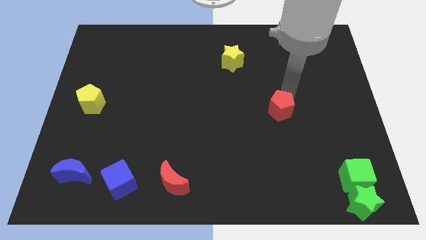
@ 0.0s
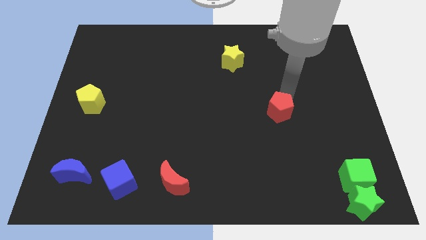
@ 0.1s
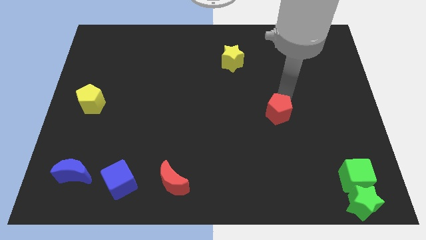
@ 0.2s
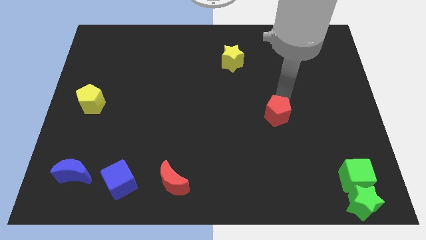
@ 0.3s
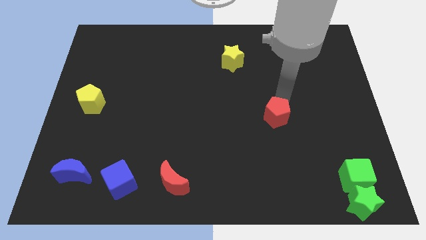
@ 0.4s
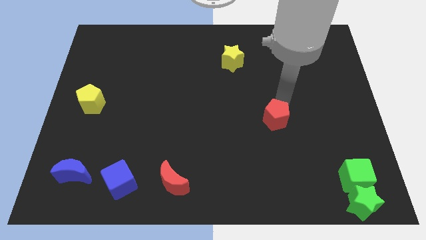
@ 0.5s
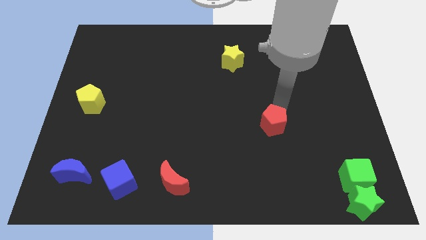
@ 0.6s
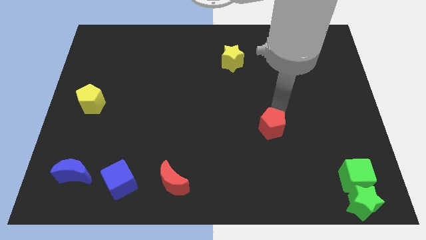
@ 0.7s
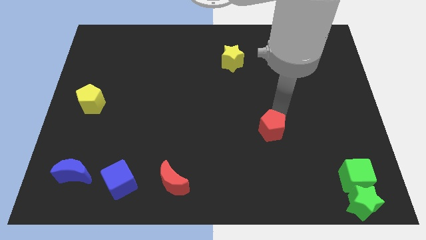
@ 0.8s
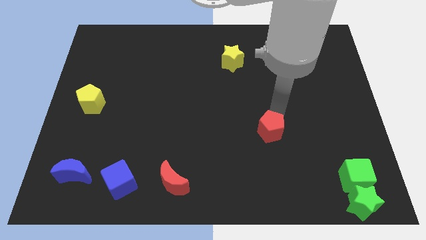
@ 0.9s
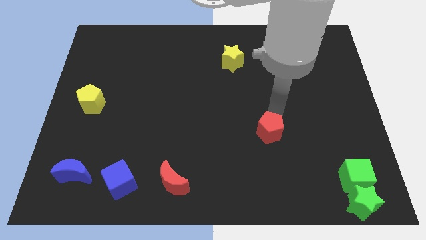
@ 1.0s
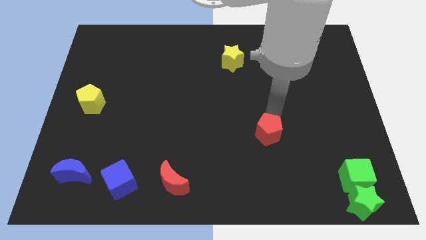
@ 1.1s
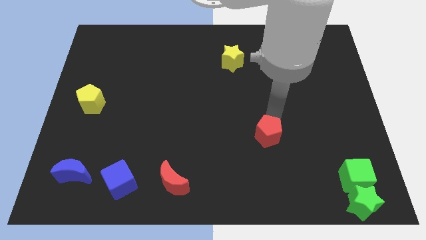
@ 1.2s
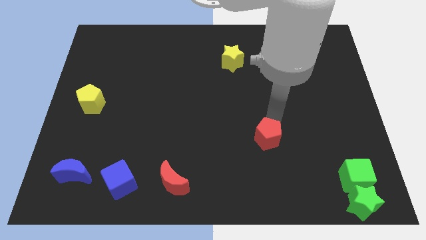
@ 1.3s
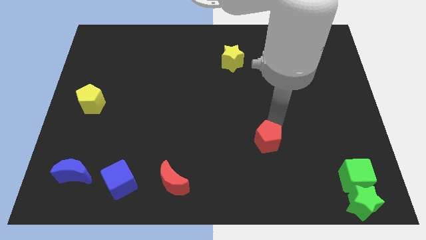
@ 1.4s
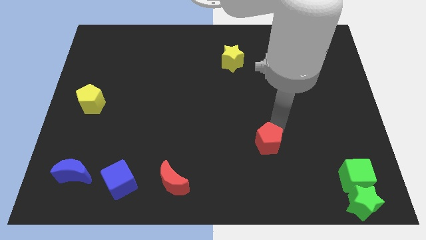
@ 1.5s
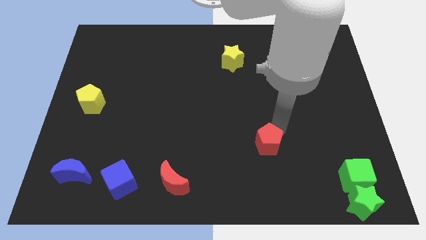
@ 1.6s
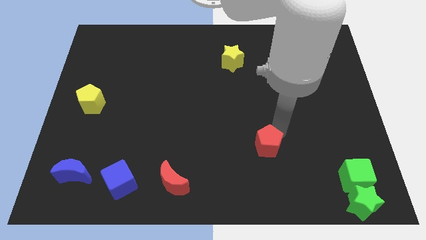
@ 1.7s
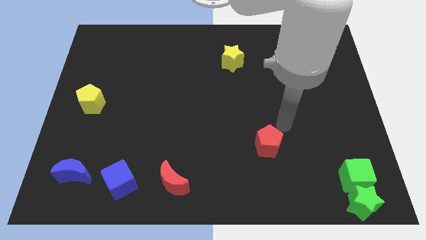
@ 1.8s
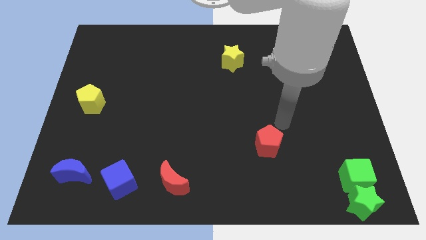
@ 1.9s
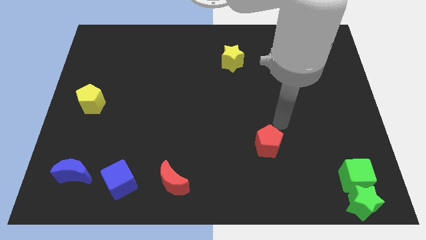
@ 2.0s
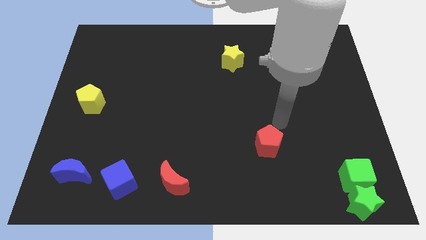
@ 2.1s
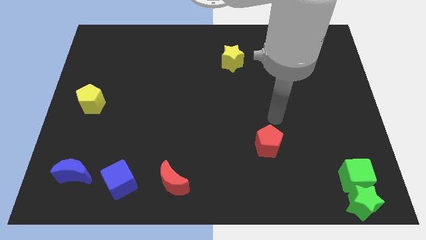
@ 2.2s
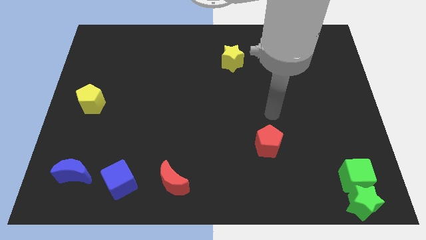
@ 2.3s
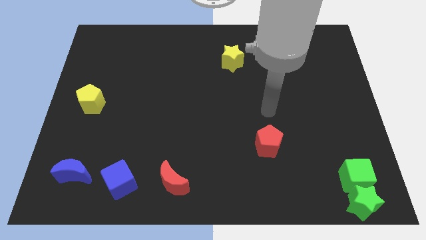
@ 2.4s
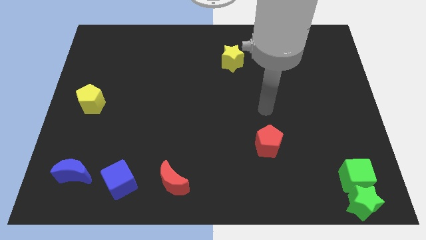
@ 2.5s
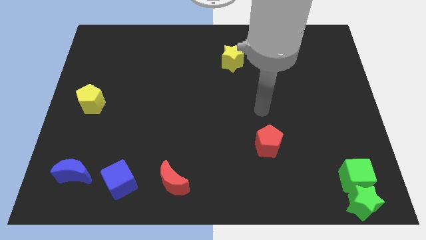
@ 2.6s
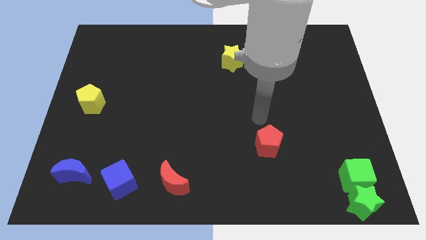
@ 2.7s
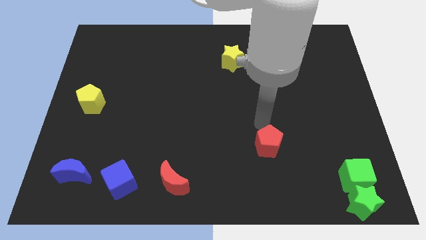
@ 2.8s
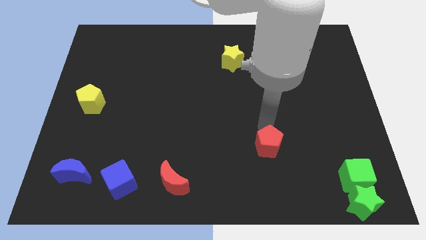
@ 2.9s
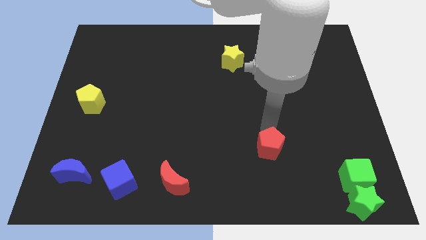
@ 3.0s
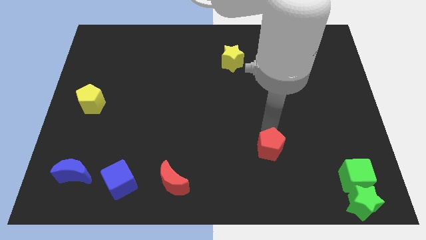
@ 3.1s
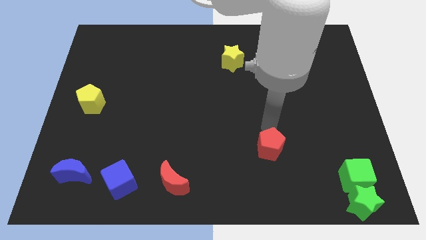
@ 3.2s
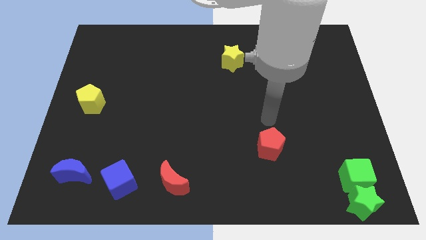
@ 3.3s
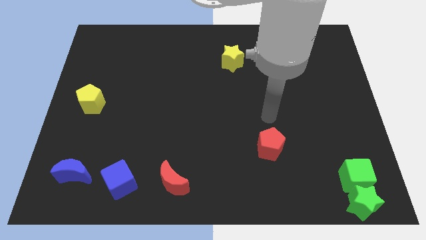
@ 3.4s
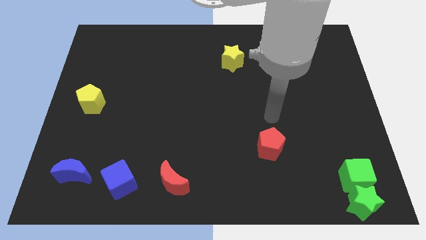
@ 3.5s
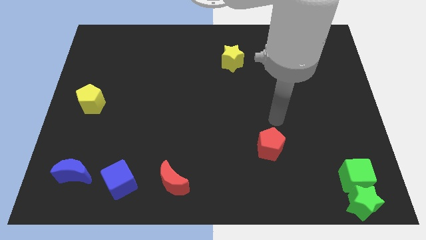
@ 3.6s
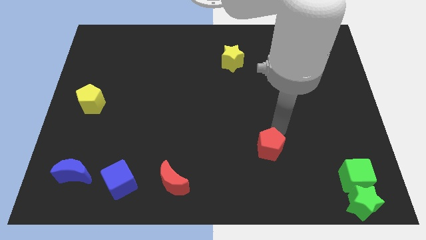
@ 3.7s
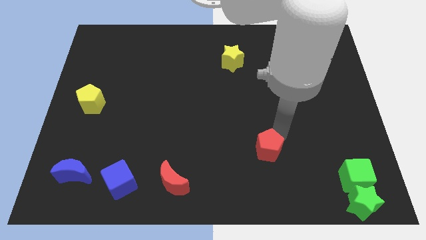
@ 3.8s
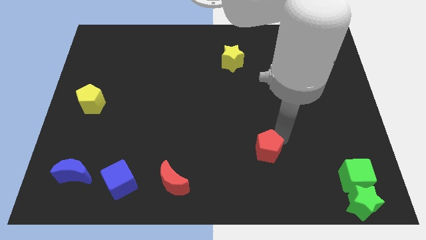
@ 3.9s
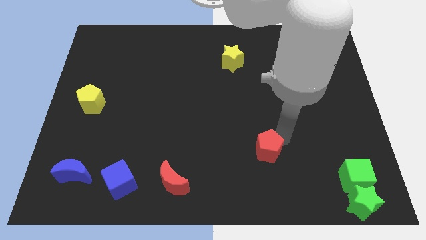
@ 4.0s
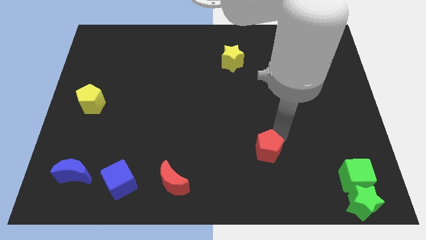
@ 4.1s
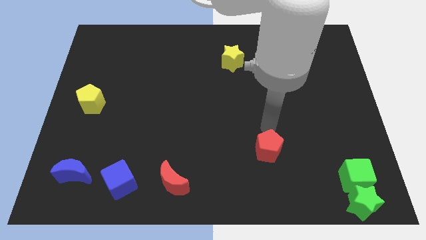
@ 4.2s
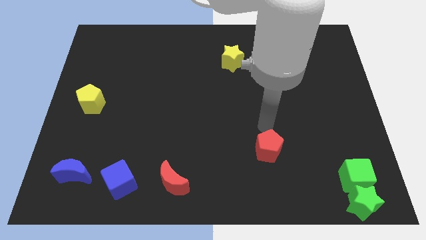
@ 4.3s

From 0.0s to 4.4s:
move the red pentagon down towards the bottom center

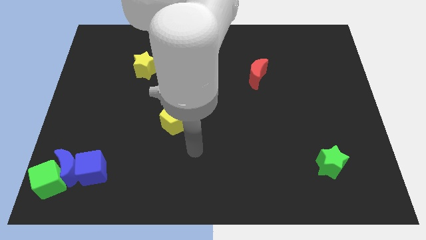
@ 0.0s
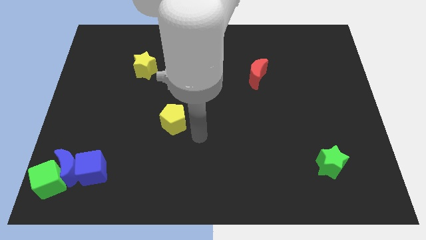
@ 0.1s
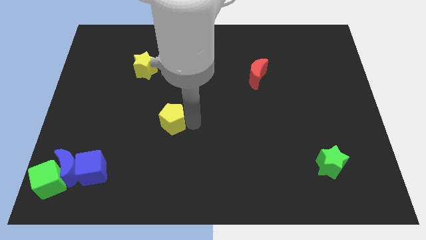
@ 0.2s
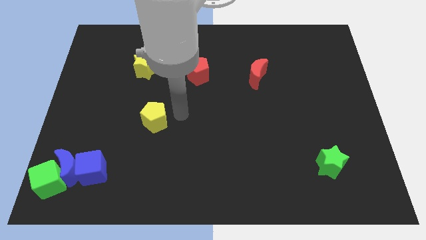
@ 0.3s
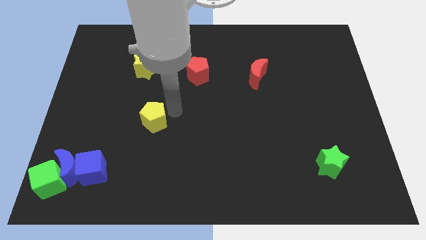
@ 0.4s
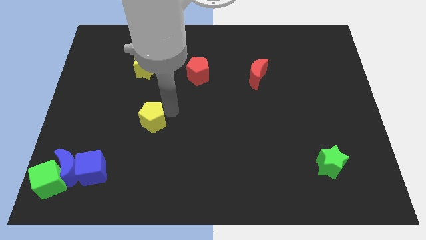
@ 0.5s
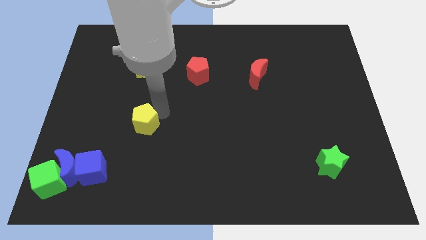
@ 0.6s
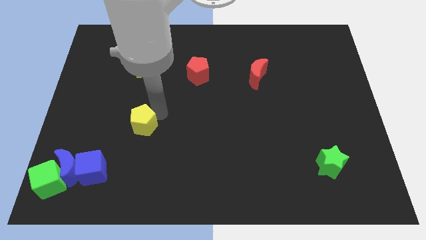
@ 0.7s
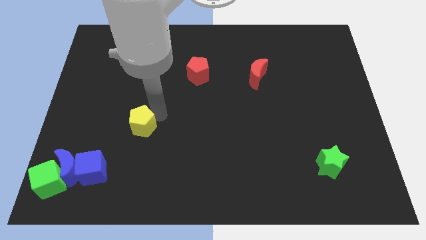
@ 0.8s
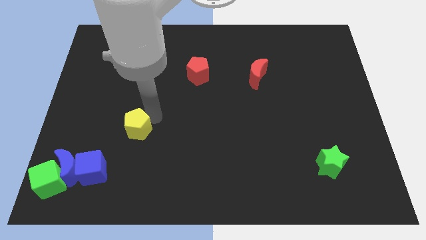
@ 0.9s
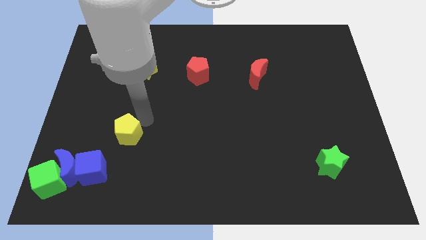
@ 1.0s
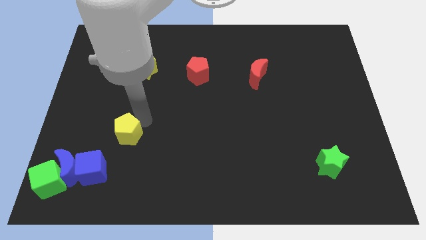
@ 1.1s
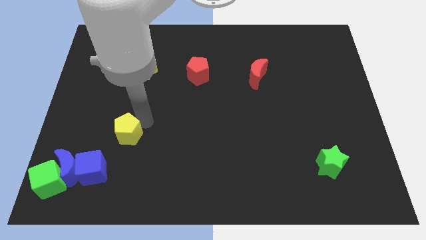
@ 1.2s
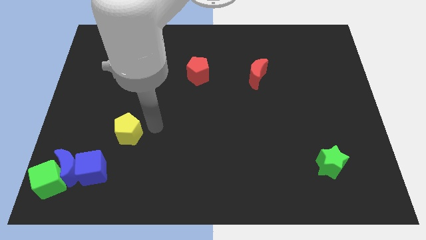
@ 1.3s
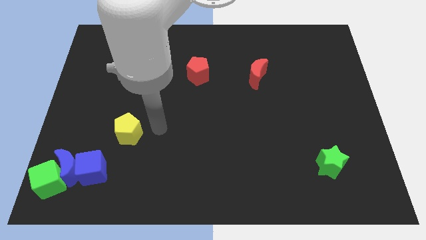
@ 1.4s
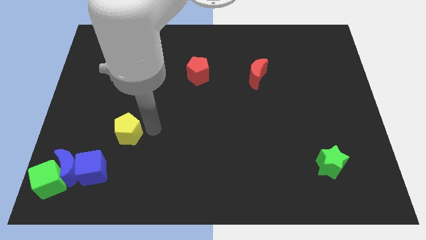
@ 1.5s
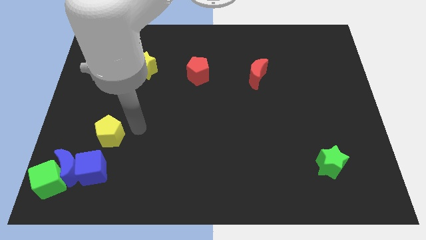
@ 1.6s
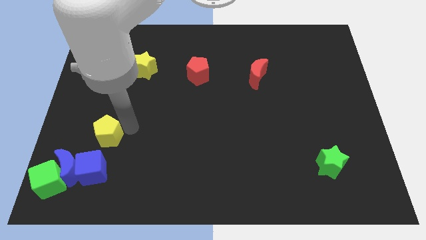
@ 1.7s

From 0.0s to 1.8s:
push the yellow pentagon to the left

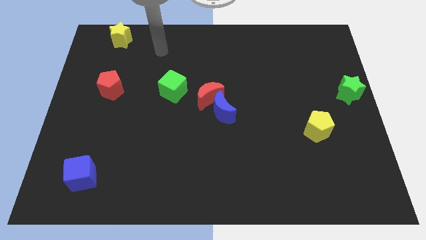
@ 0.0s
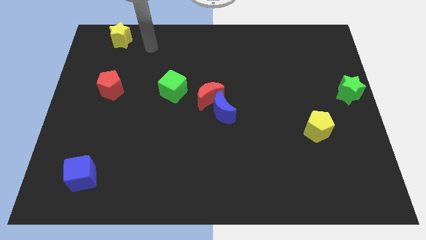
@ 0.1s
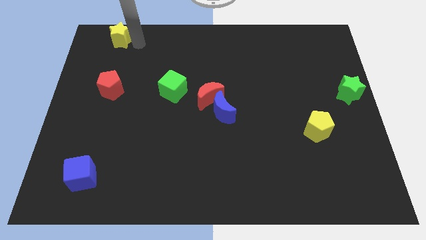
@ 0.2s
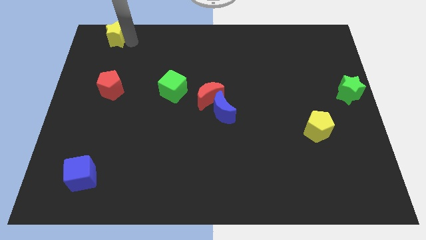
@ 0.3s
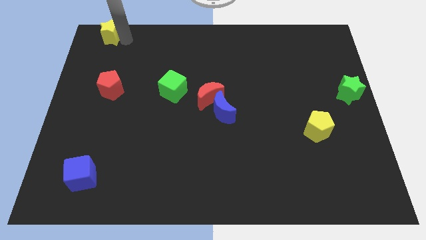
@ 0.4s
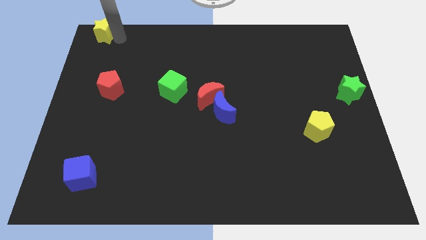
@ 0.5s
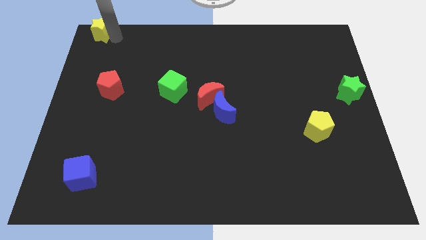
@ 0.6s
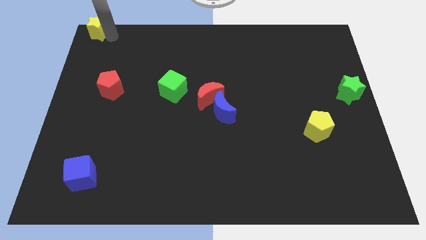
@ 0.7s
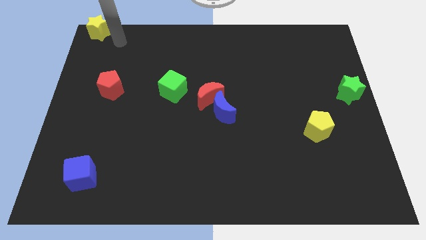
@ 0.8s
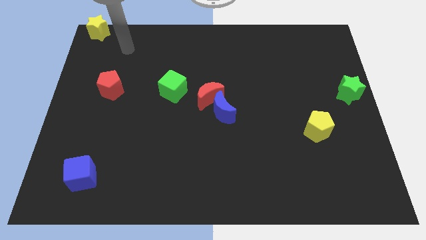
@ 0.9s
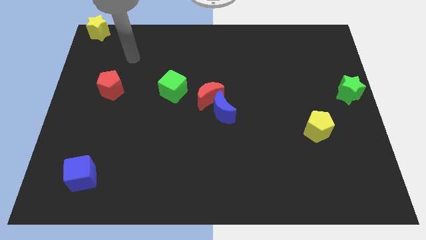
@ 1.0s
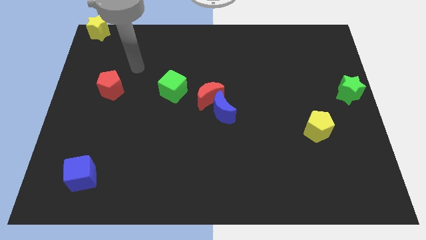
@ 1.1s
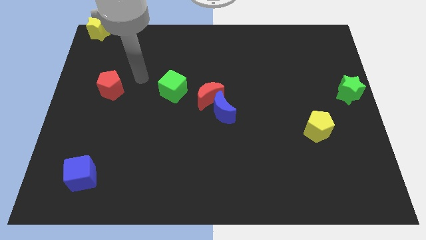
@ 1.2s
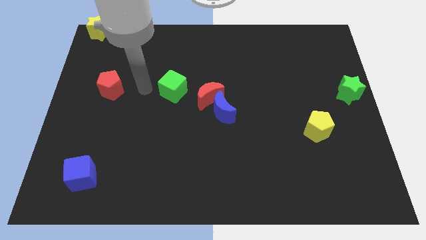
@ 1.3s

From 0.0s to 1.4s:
push the yellow star to the top left corner of the board

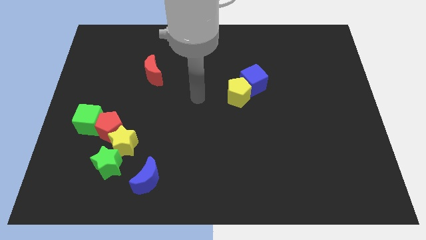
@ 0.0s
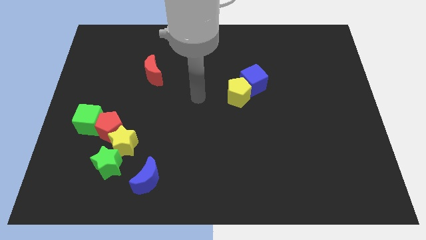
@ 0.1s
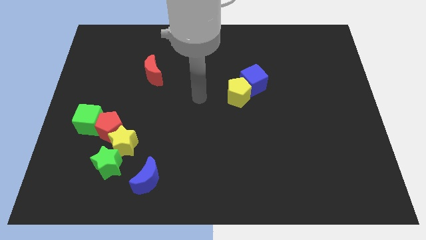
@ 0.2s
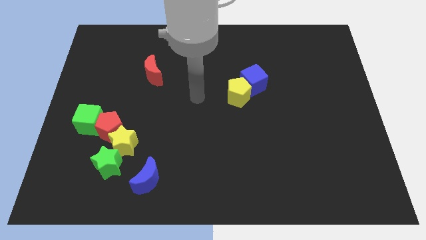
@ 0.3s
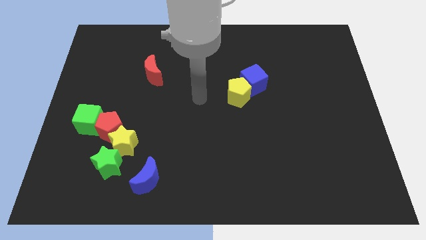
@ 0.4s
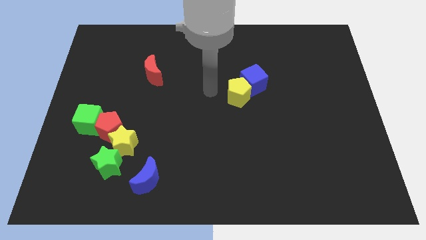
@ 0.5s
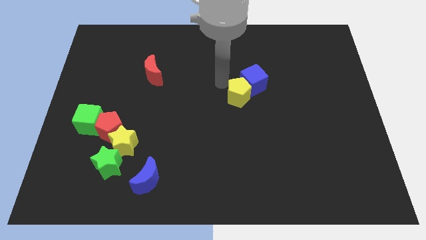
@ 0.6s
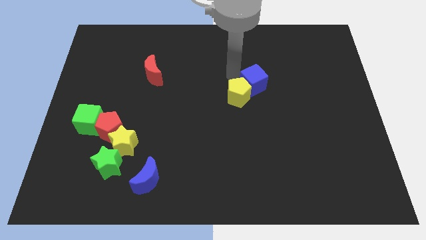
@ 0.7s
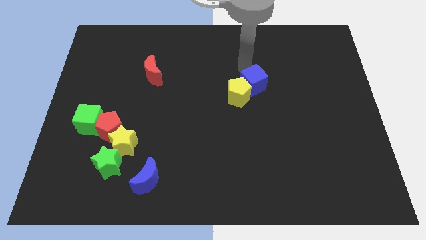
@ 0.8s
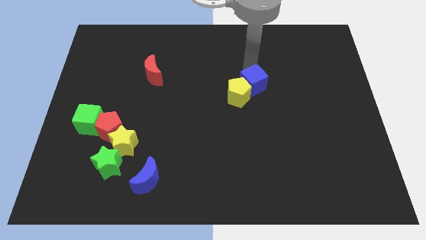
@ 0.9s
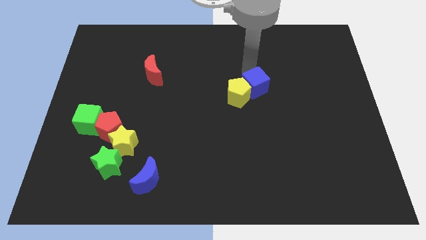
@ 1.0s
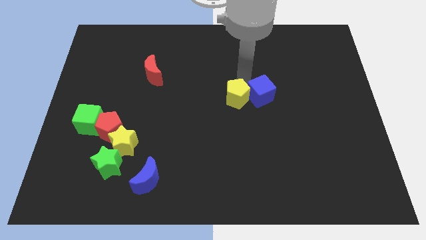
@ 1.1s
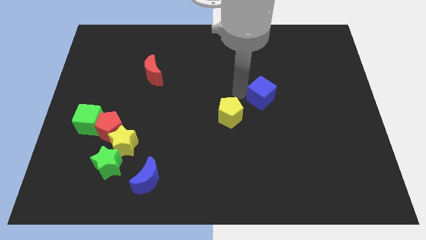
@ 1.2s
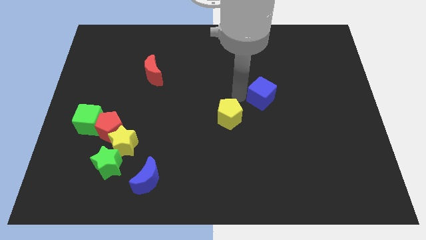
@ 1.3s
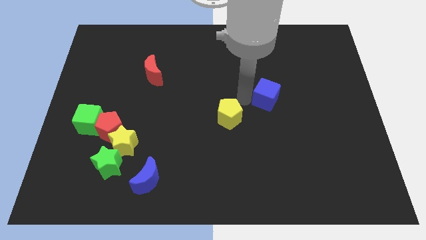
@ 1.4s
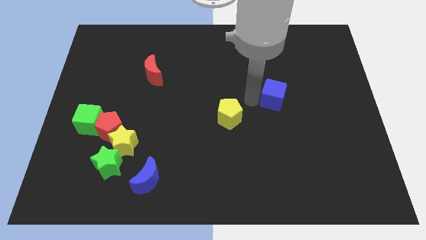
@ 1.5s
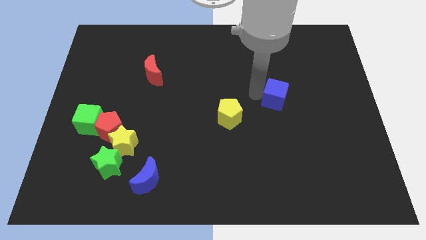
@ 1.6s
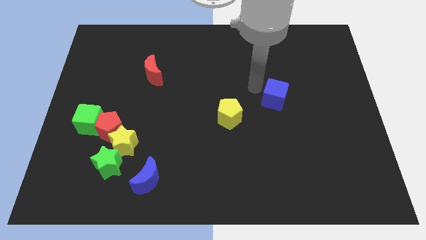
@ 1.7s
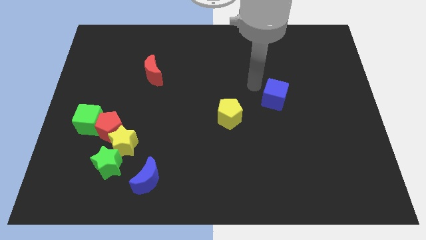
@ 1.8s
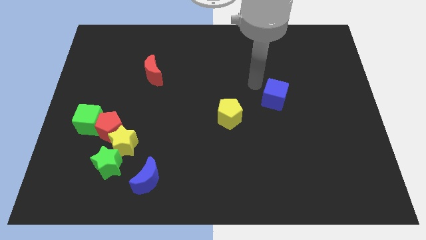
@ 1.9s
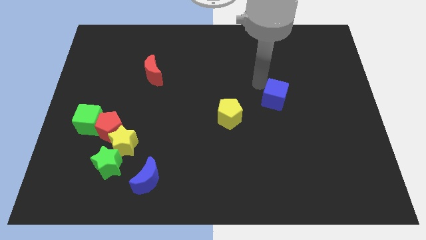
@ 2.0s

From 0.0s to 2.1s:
separate the blue cube and yellow pentagon
